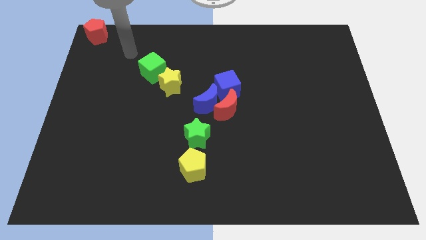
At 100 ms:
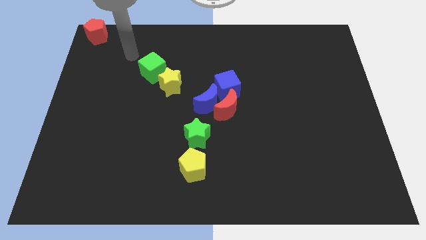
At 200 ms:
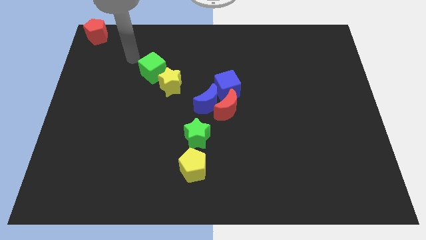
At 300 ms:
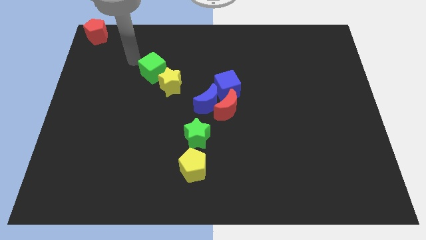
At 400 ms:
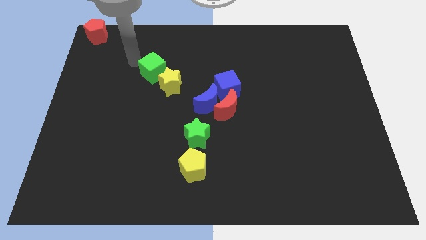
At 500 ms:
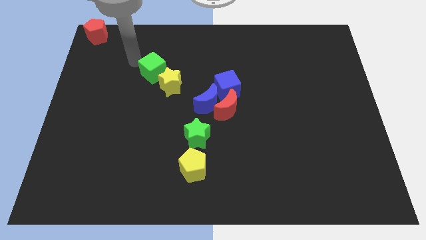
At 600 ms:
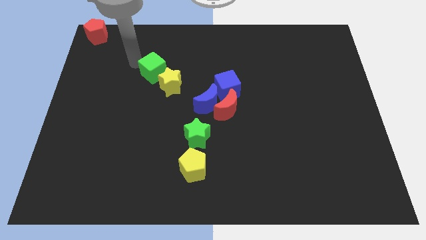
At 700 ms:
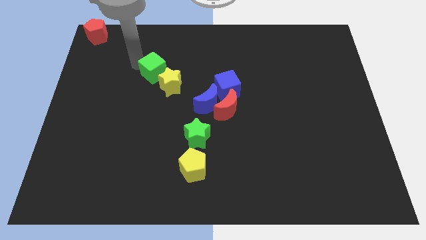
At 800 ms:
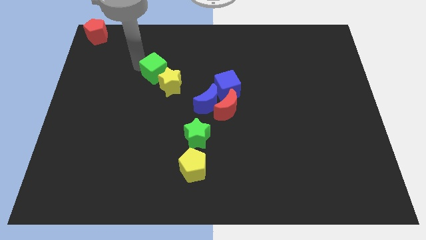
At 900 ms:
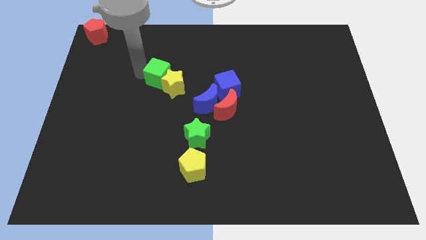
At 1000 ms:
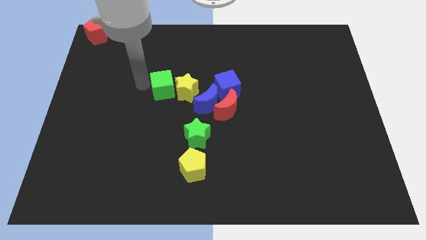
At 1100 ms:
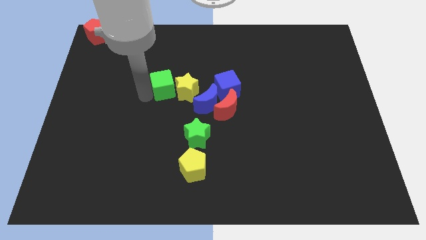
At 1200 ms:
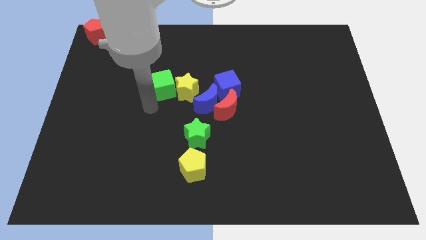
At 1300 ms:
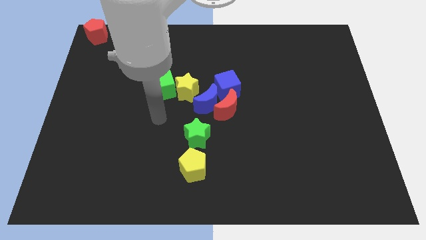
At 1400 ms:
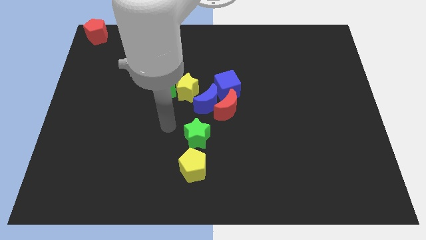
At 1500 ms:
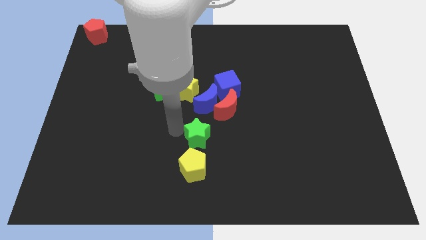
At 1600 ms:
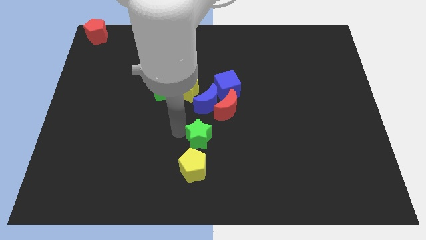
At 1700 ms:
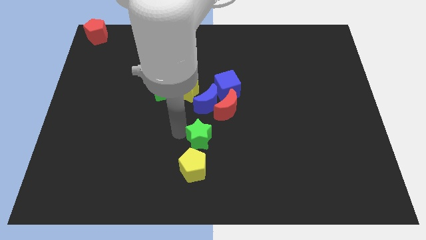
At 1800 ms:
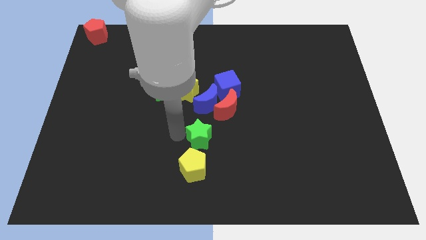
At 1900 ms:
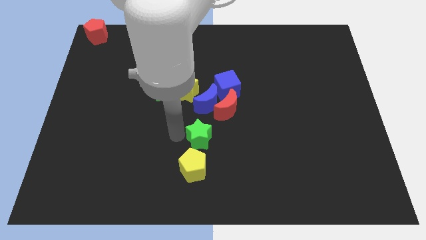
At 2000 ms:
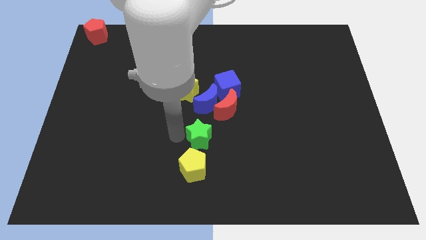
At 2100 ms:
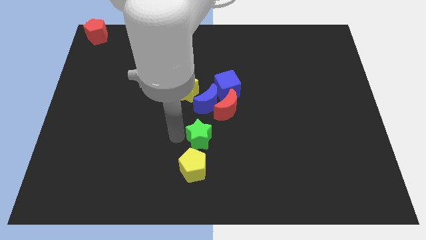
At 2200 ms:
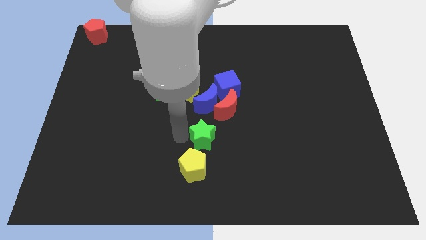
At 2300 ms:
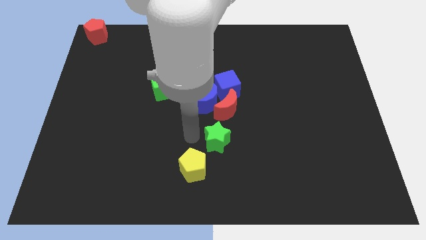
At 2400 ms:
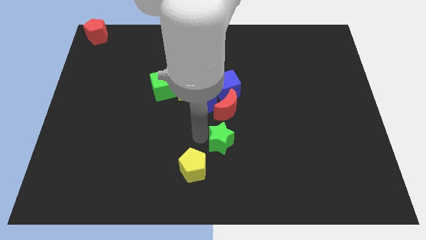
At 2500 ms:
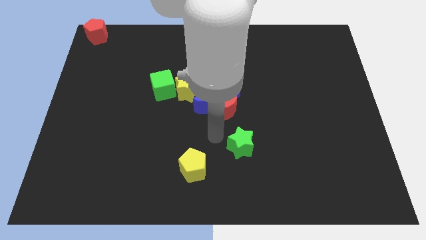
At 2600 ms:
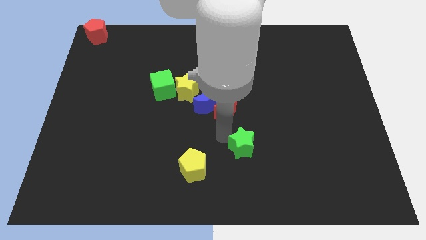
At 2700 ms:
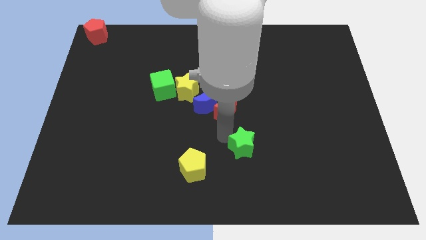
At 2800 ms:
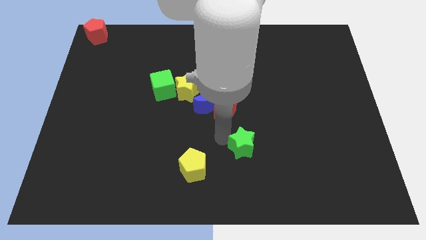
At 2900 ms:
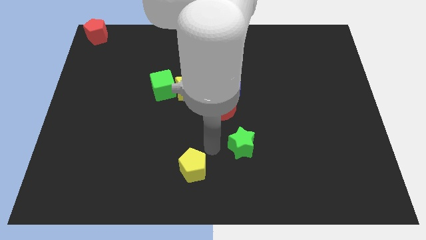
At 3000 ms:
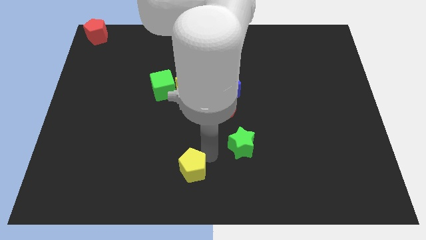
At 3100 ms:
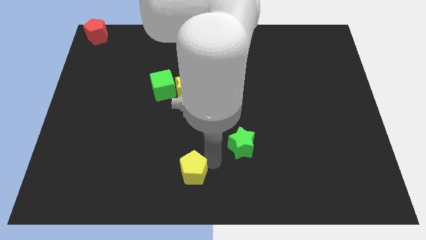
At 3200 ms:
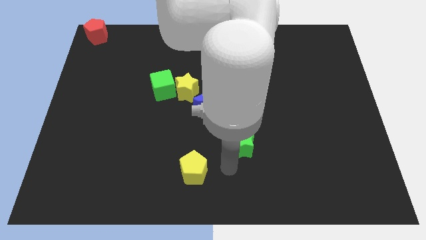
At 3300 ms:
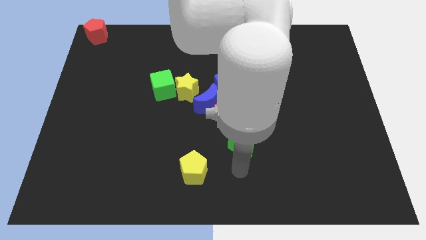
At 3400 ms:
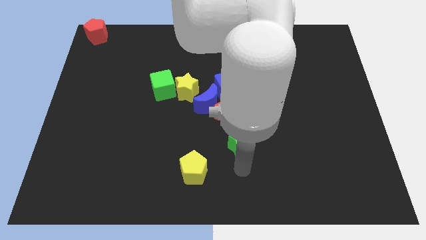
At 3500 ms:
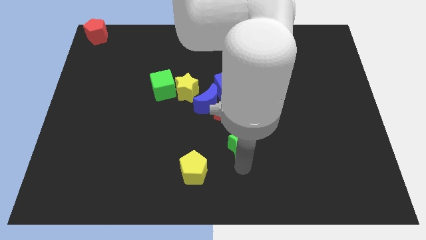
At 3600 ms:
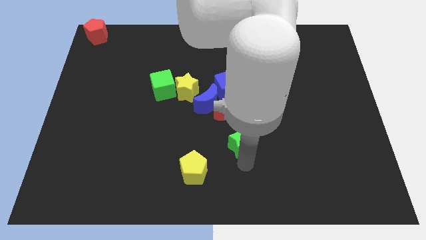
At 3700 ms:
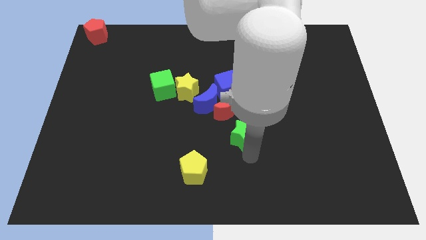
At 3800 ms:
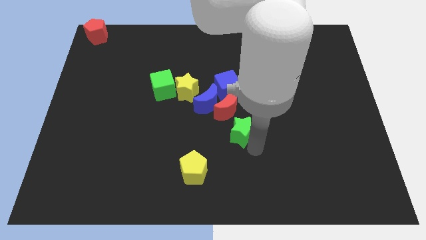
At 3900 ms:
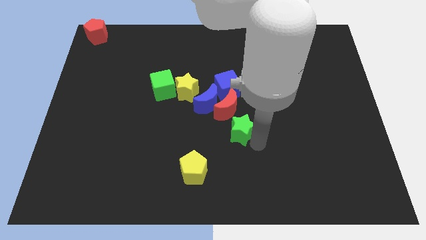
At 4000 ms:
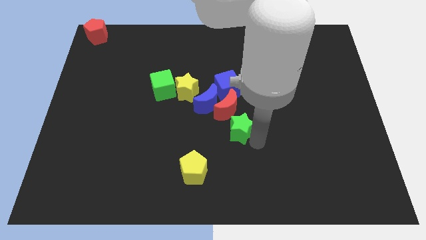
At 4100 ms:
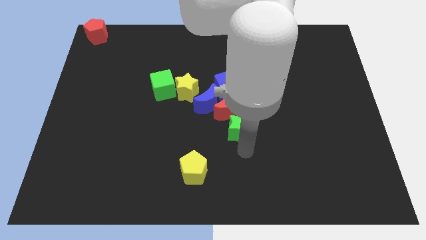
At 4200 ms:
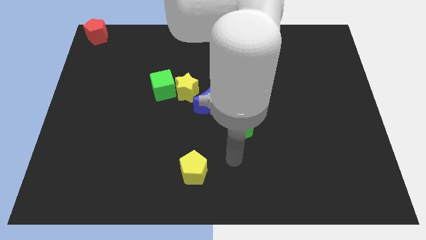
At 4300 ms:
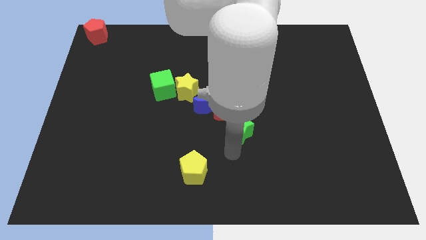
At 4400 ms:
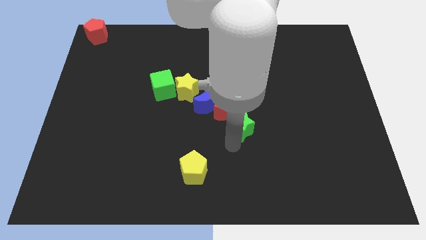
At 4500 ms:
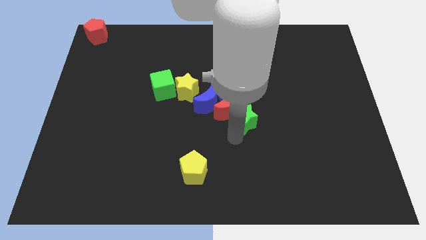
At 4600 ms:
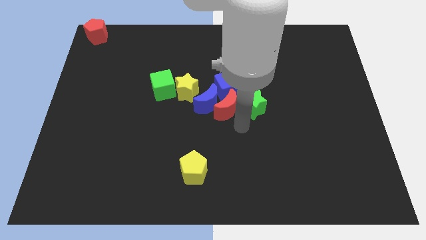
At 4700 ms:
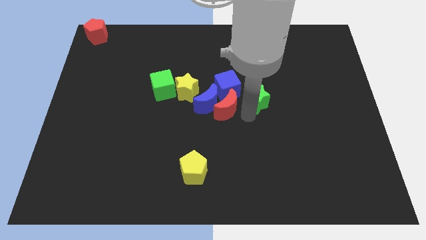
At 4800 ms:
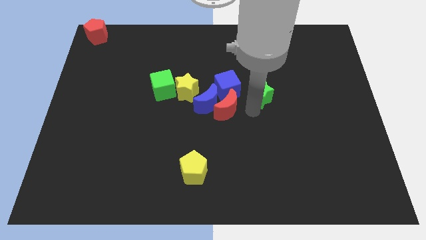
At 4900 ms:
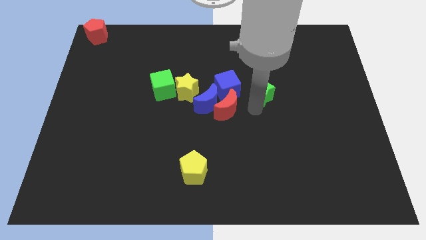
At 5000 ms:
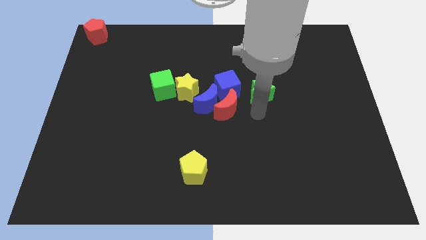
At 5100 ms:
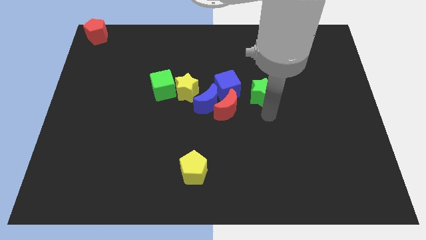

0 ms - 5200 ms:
place the green star right to the blue cube

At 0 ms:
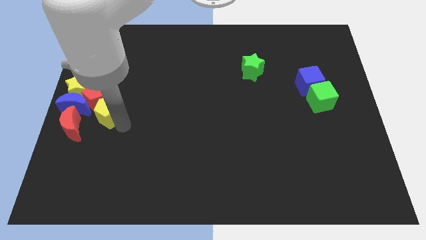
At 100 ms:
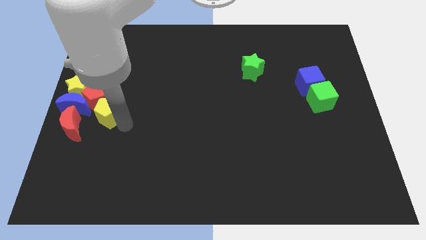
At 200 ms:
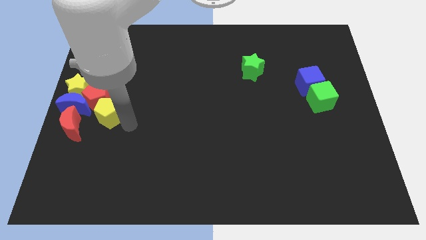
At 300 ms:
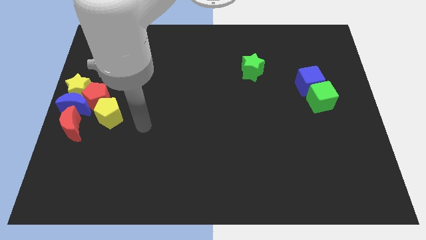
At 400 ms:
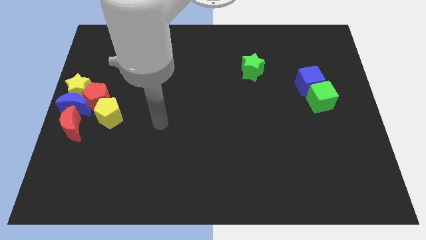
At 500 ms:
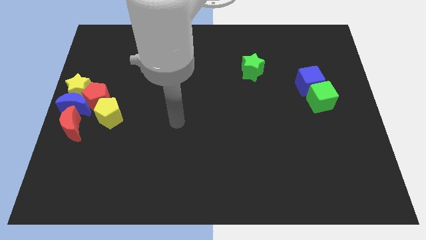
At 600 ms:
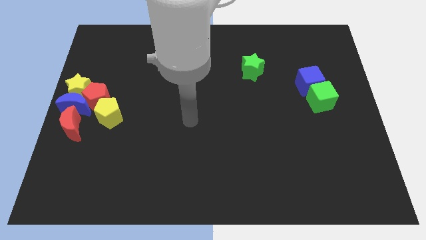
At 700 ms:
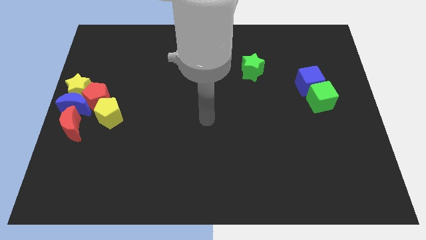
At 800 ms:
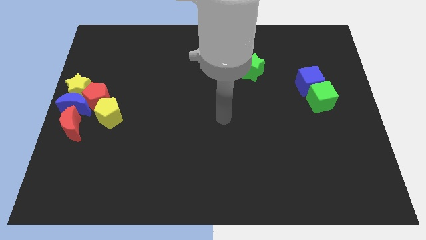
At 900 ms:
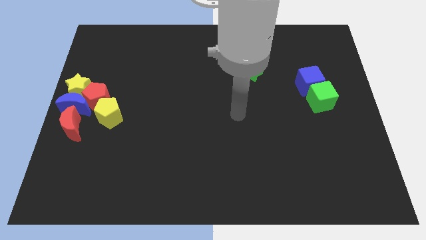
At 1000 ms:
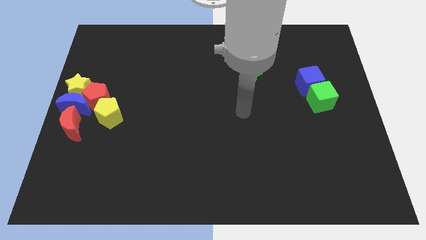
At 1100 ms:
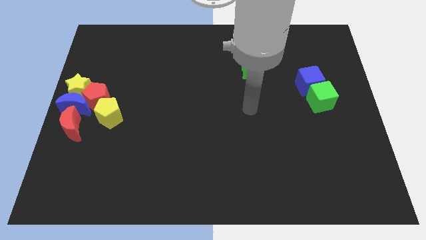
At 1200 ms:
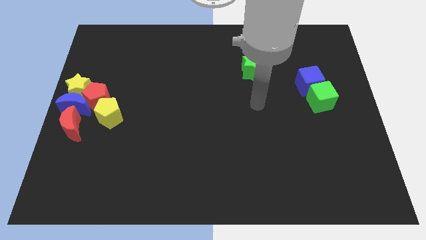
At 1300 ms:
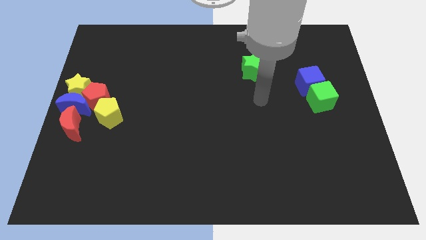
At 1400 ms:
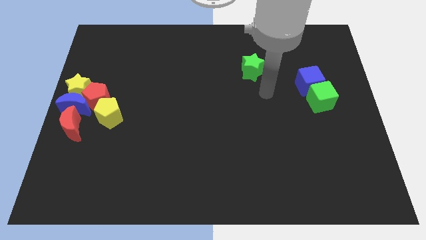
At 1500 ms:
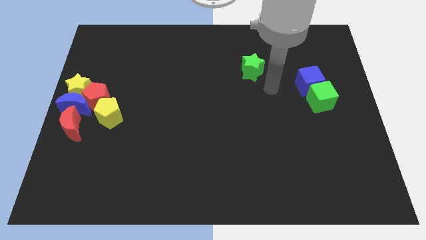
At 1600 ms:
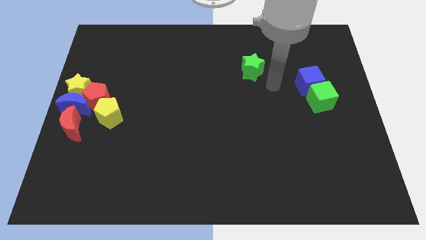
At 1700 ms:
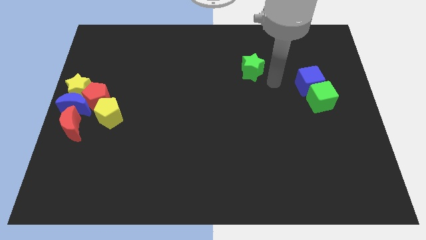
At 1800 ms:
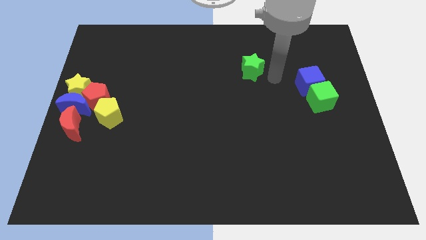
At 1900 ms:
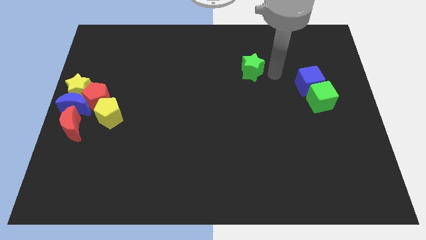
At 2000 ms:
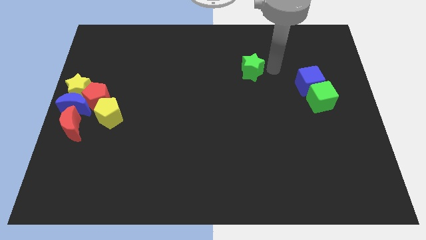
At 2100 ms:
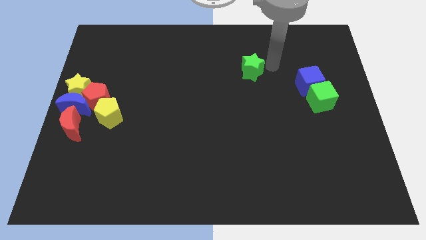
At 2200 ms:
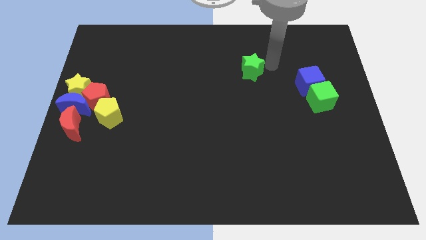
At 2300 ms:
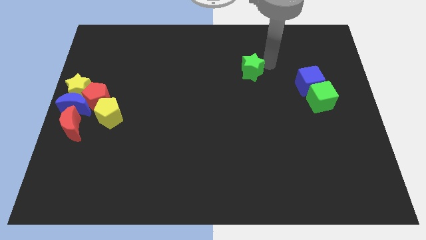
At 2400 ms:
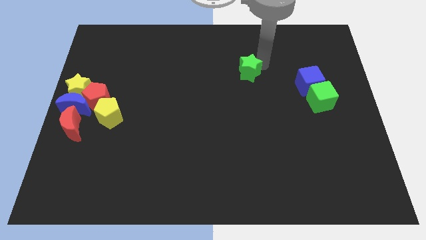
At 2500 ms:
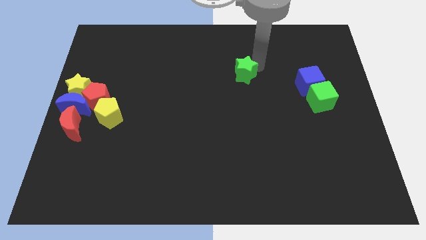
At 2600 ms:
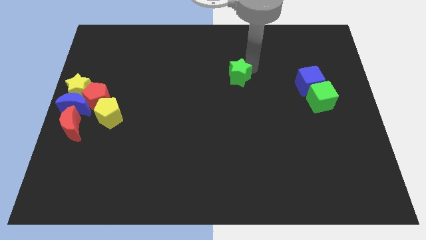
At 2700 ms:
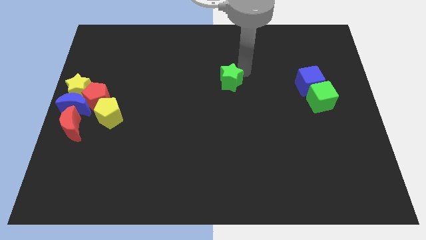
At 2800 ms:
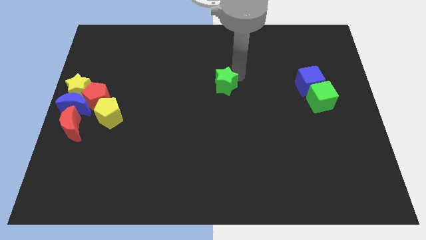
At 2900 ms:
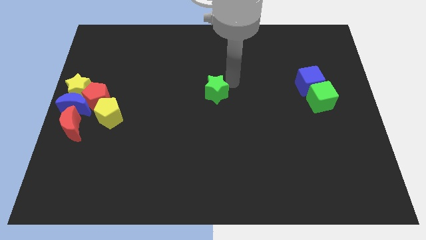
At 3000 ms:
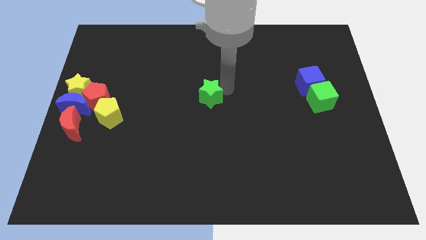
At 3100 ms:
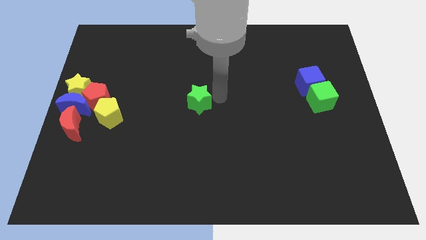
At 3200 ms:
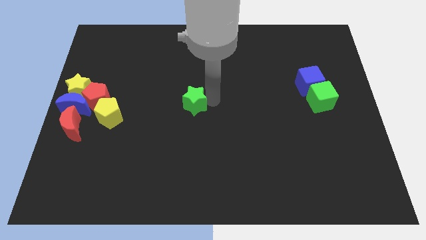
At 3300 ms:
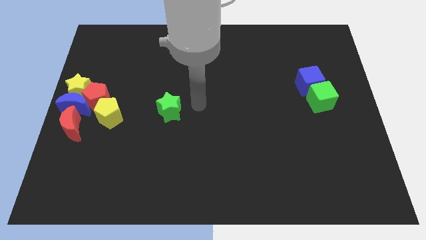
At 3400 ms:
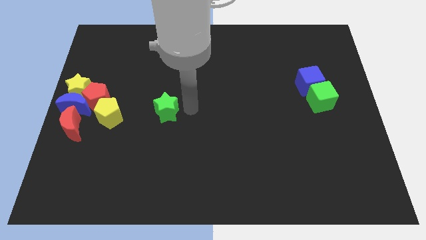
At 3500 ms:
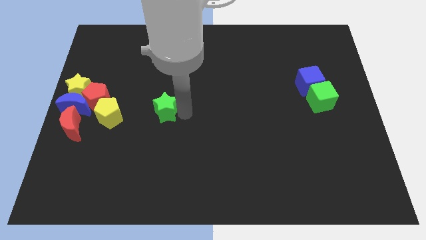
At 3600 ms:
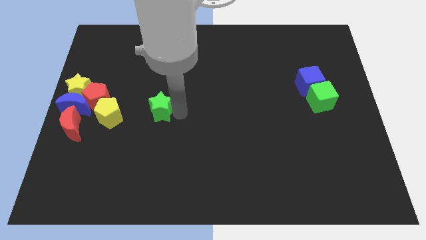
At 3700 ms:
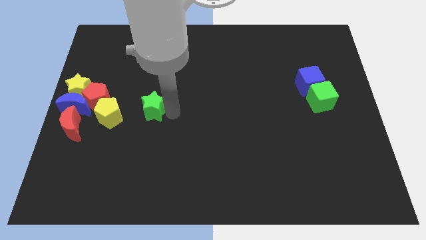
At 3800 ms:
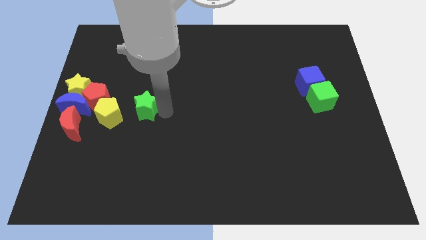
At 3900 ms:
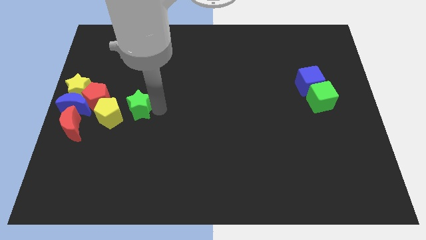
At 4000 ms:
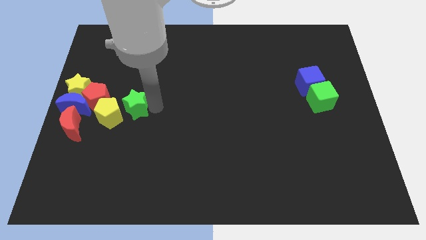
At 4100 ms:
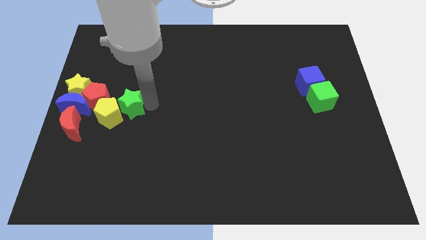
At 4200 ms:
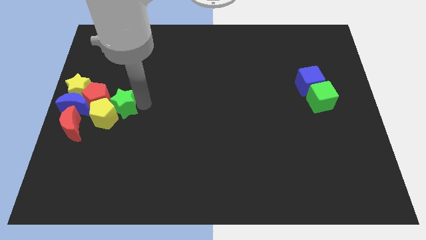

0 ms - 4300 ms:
slide the green star into the yellow pentagon
